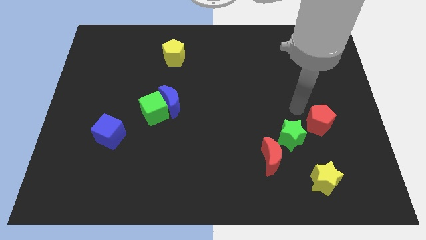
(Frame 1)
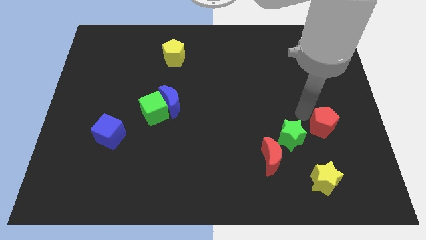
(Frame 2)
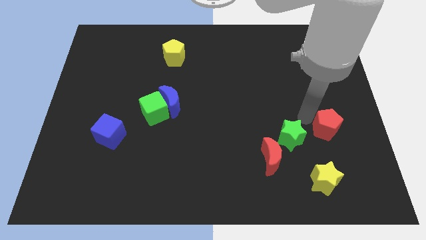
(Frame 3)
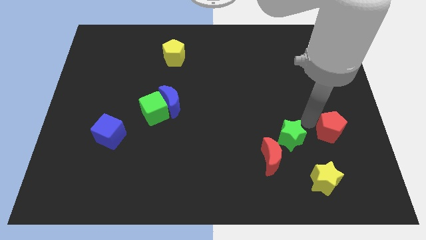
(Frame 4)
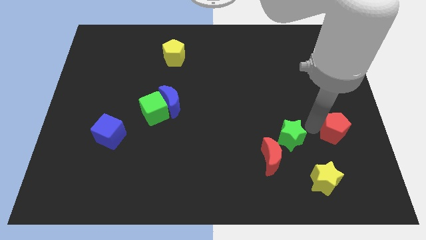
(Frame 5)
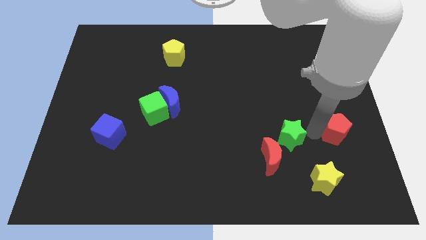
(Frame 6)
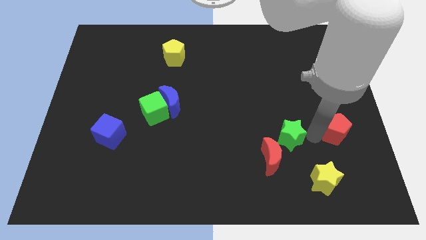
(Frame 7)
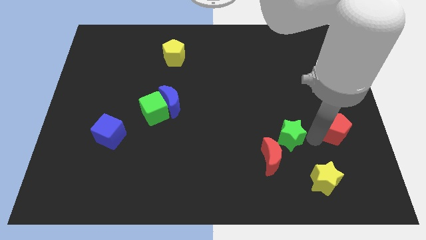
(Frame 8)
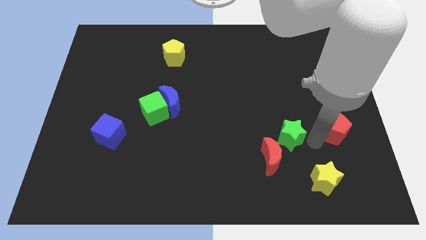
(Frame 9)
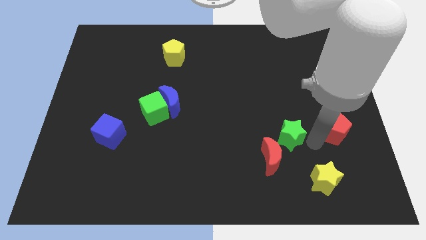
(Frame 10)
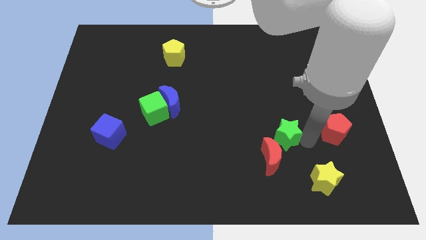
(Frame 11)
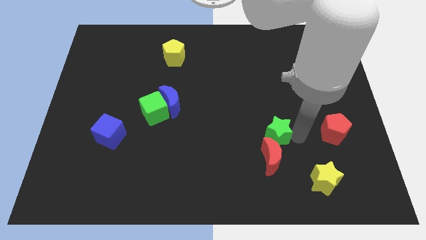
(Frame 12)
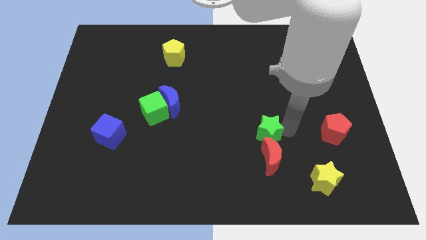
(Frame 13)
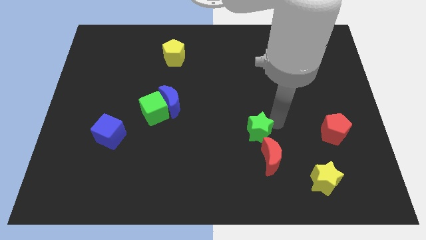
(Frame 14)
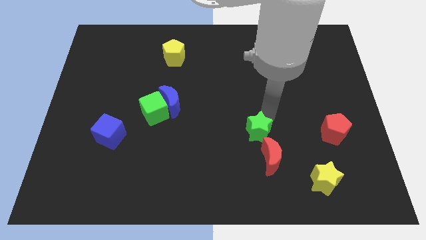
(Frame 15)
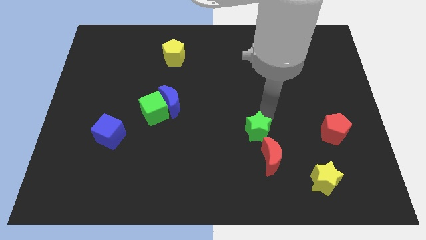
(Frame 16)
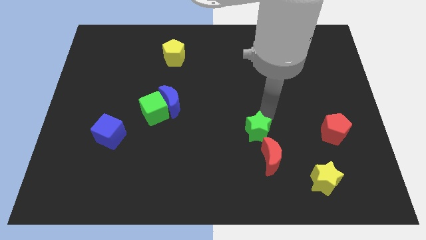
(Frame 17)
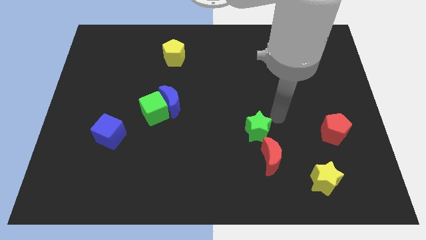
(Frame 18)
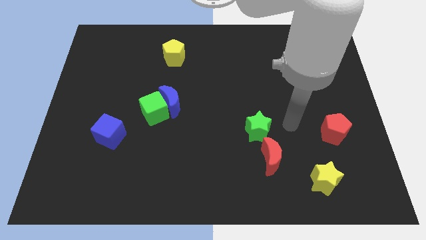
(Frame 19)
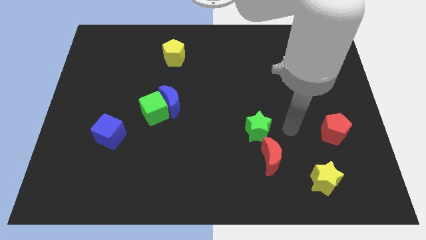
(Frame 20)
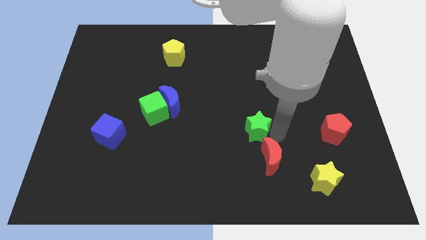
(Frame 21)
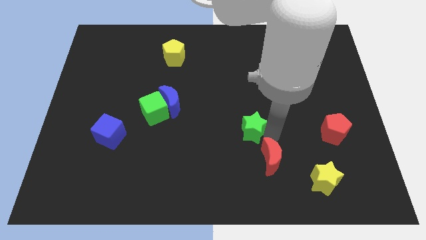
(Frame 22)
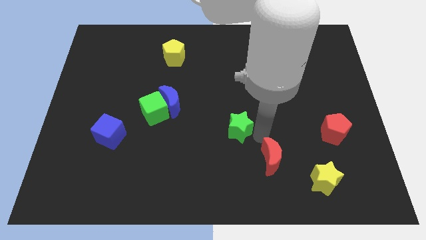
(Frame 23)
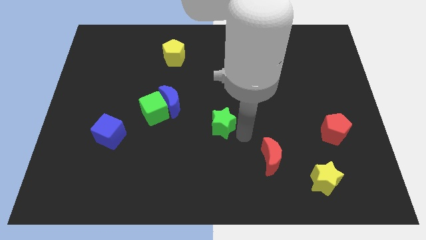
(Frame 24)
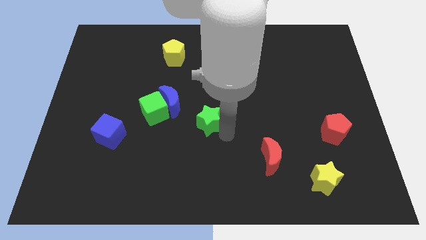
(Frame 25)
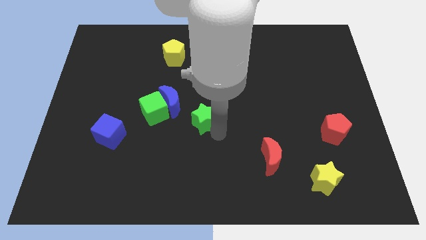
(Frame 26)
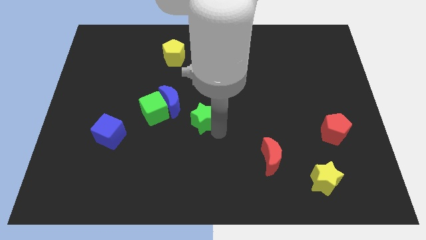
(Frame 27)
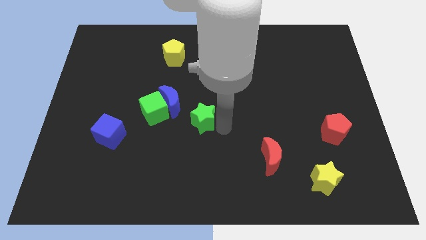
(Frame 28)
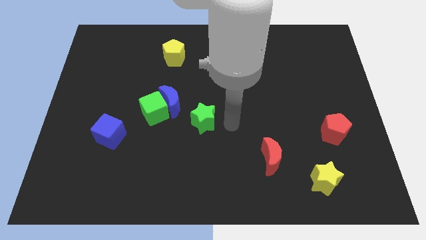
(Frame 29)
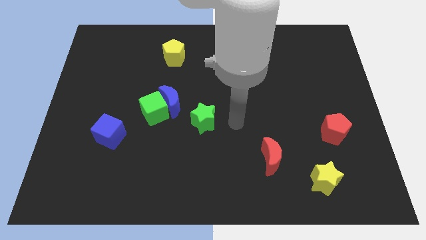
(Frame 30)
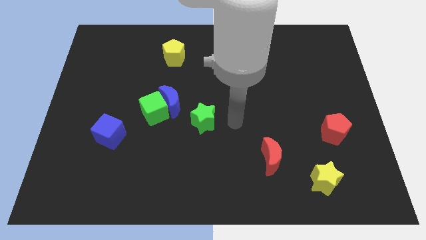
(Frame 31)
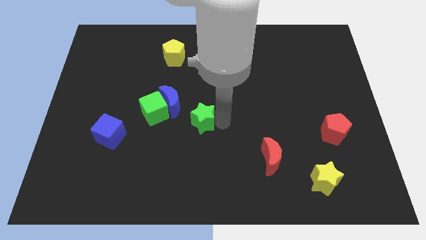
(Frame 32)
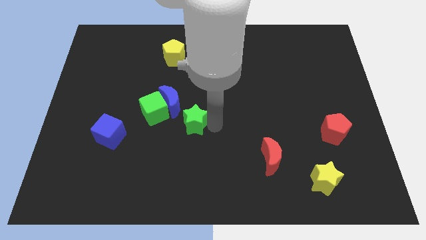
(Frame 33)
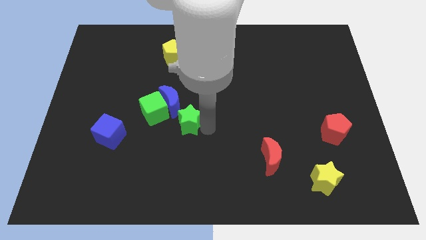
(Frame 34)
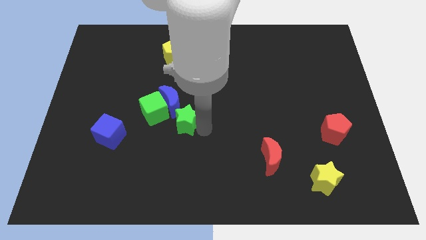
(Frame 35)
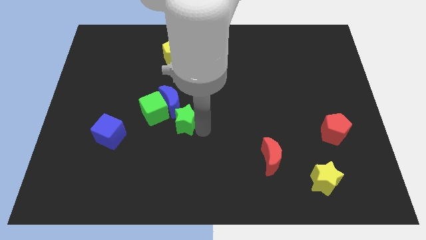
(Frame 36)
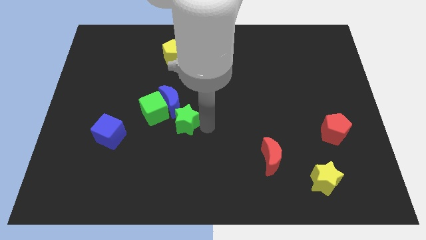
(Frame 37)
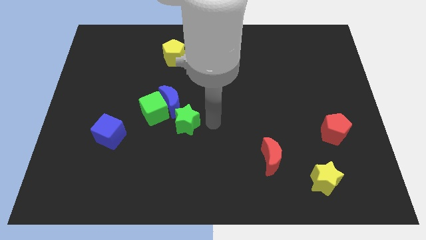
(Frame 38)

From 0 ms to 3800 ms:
push the green star to the green cube and blue crescent

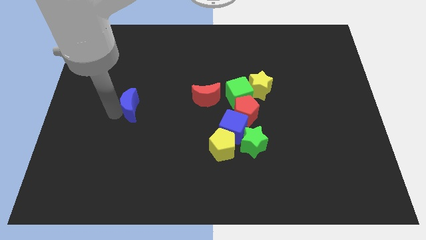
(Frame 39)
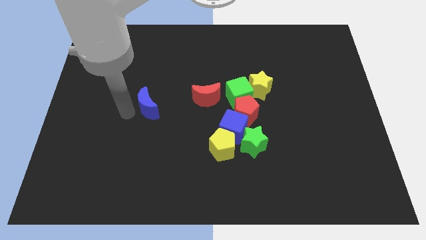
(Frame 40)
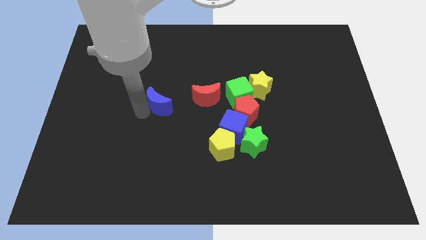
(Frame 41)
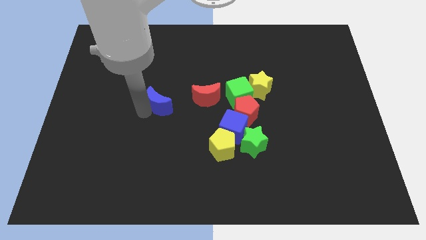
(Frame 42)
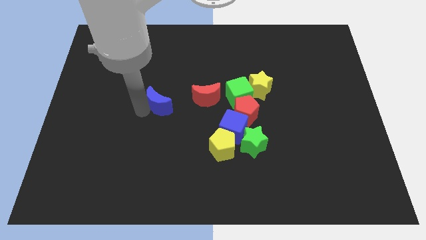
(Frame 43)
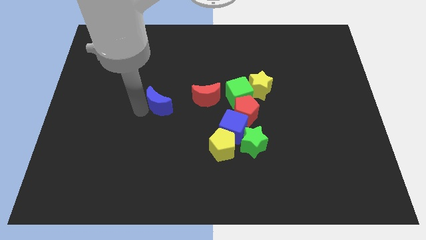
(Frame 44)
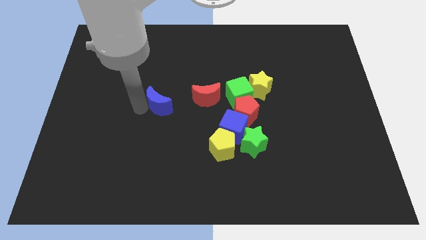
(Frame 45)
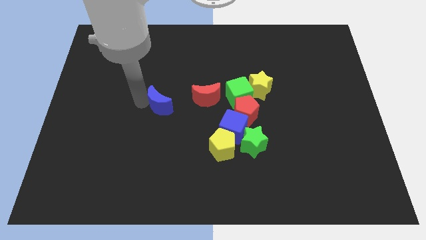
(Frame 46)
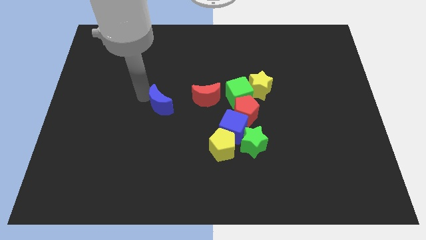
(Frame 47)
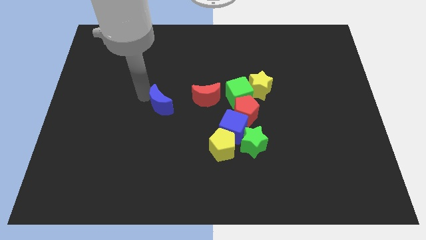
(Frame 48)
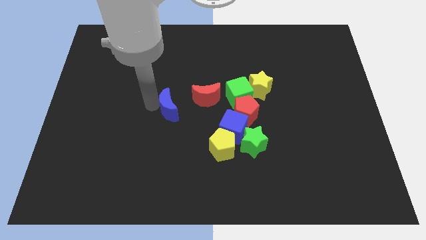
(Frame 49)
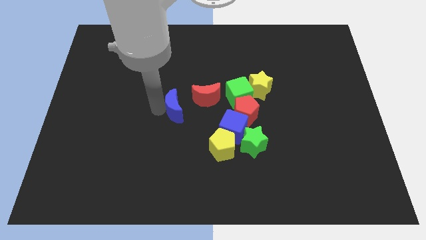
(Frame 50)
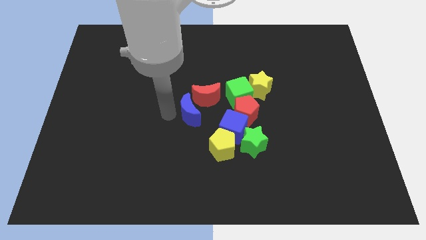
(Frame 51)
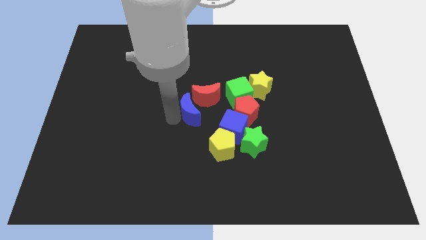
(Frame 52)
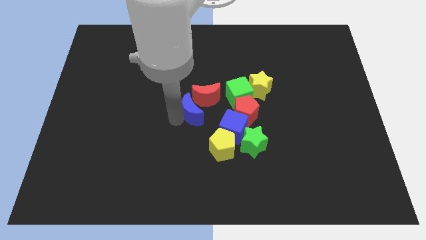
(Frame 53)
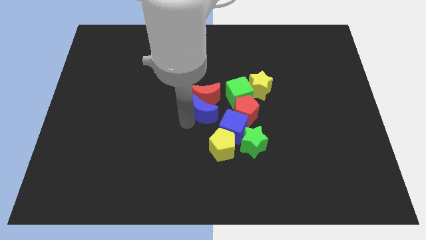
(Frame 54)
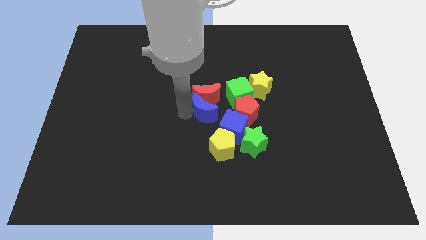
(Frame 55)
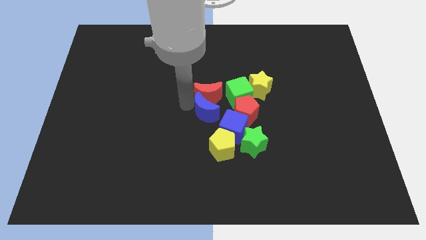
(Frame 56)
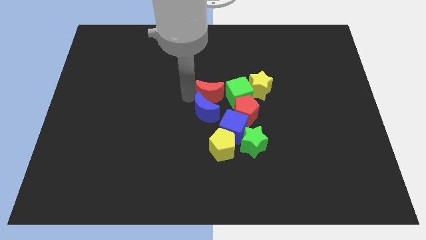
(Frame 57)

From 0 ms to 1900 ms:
place blue crescent below red crescent

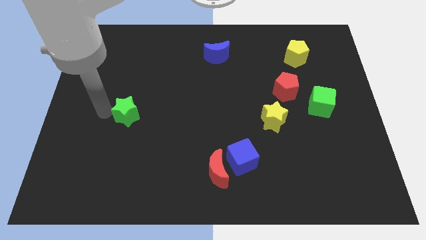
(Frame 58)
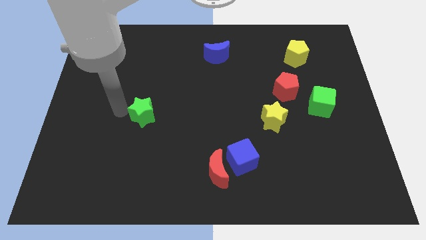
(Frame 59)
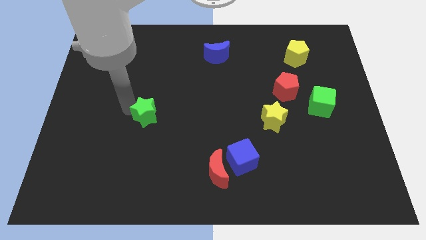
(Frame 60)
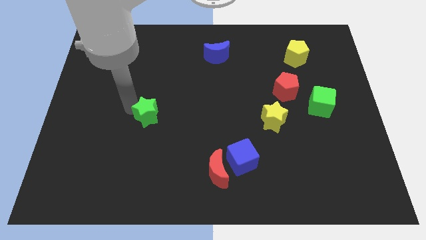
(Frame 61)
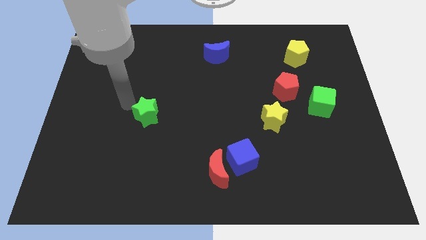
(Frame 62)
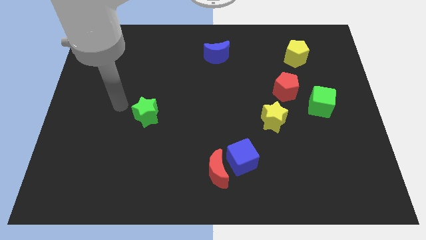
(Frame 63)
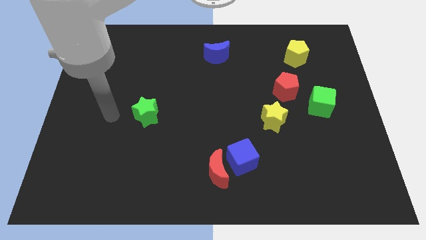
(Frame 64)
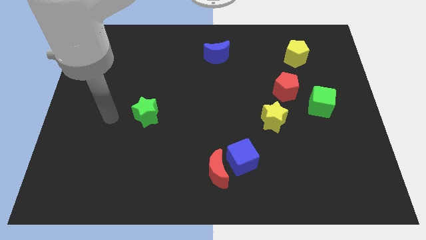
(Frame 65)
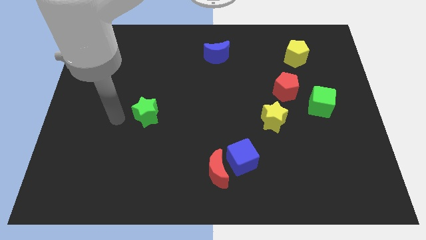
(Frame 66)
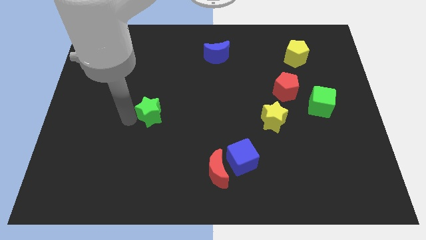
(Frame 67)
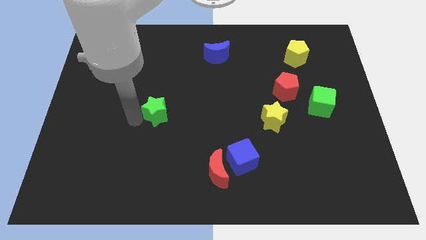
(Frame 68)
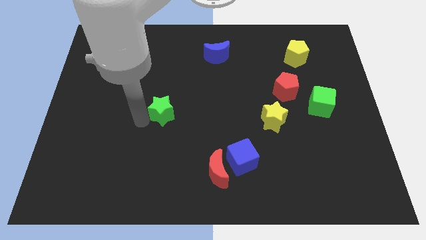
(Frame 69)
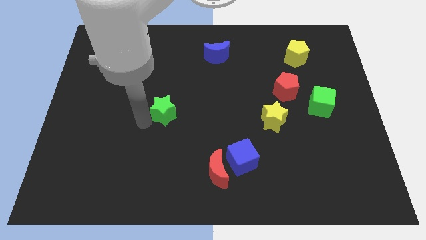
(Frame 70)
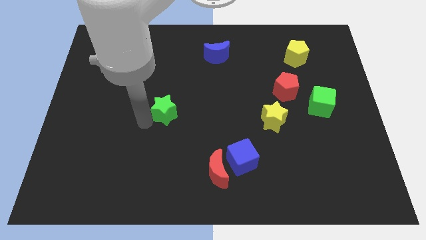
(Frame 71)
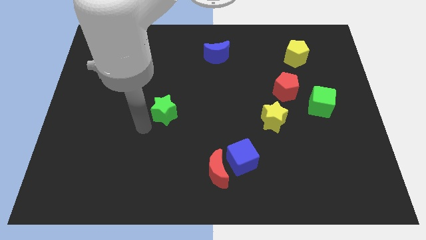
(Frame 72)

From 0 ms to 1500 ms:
push green star towards centre of the board

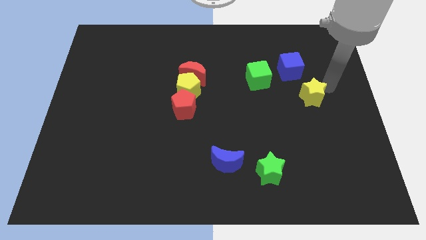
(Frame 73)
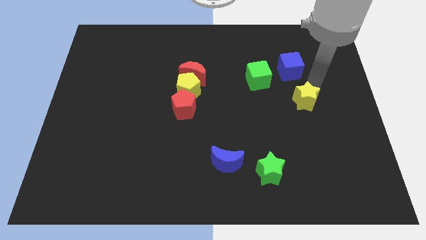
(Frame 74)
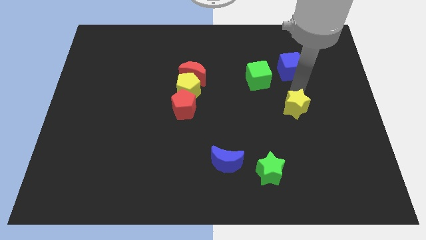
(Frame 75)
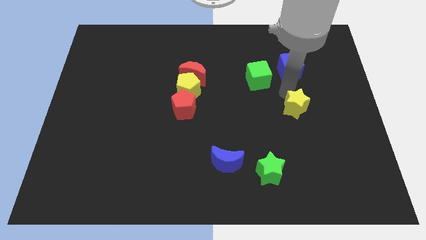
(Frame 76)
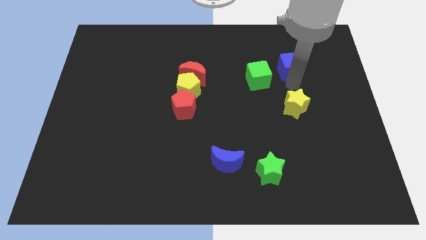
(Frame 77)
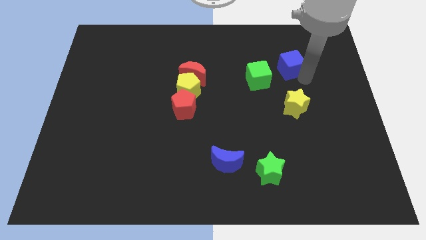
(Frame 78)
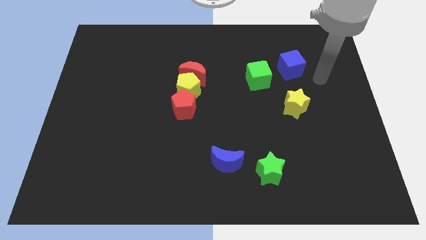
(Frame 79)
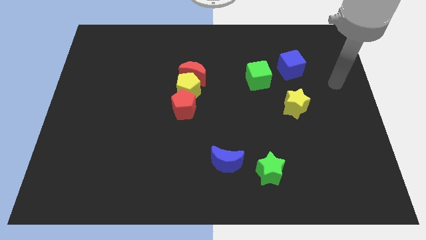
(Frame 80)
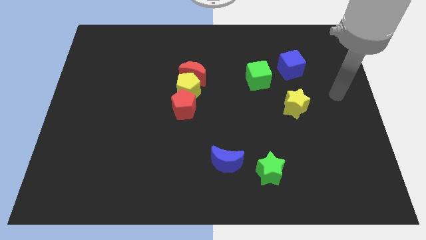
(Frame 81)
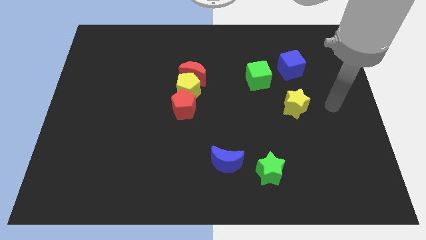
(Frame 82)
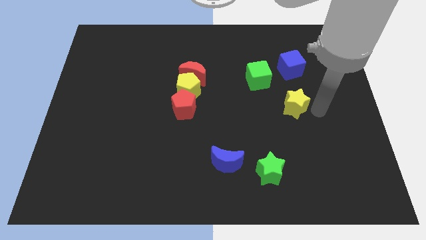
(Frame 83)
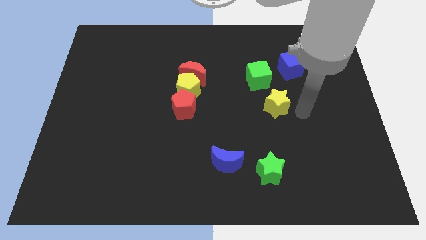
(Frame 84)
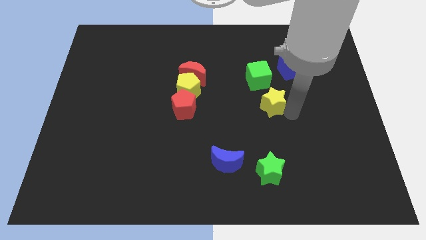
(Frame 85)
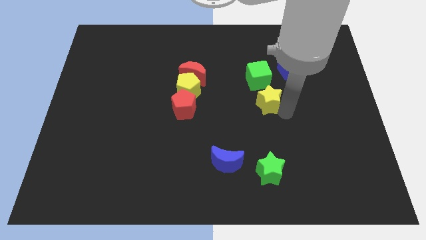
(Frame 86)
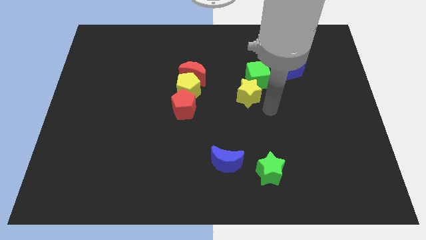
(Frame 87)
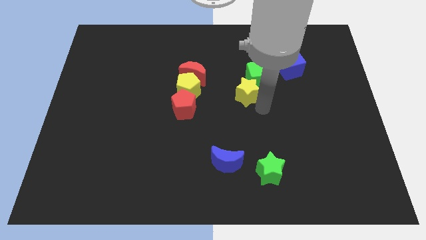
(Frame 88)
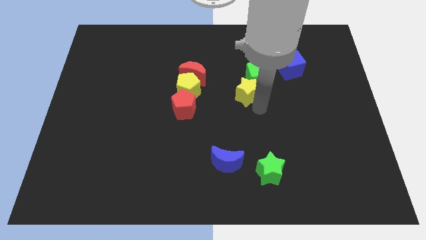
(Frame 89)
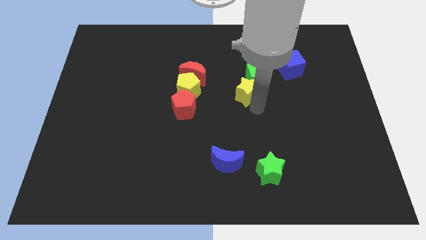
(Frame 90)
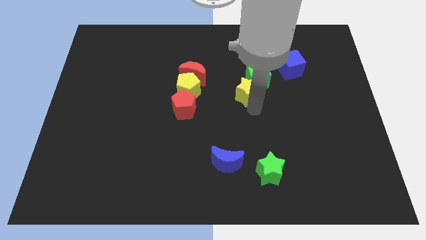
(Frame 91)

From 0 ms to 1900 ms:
push the yellow star at the bottom left of the green cube

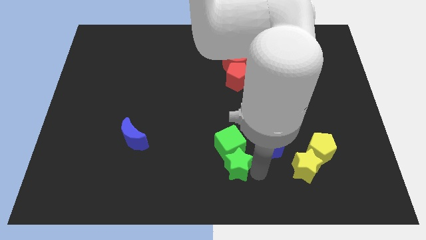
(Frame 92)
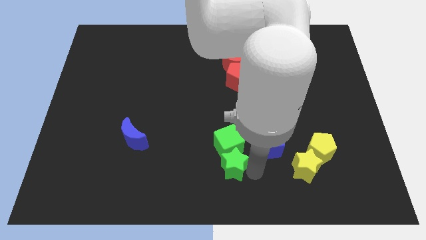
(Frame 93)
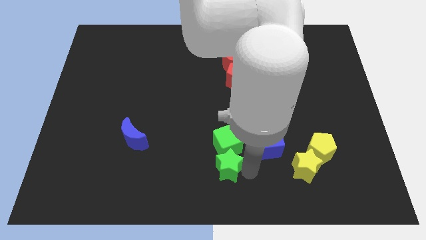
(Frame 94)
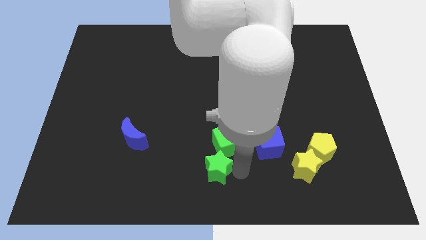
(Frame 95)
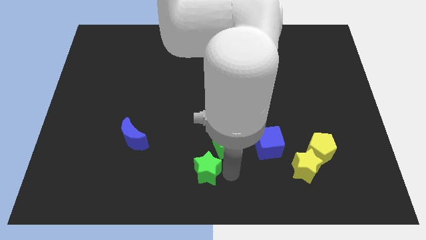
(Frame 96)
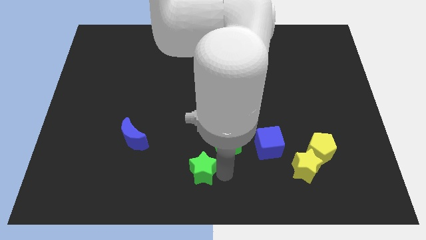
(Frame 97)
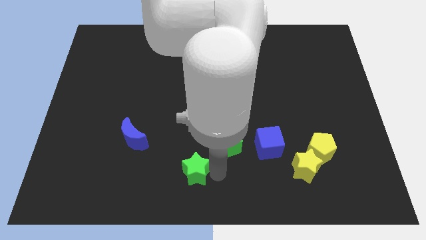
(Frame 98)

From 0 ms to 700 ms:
push the green star slightly to the left
